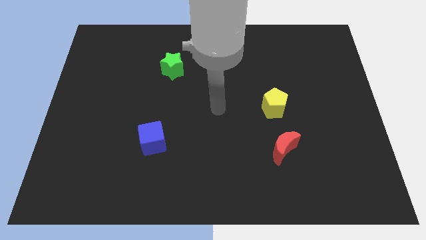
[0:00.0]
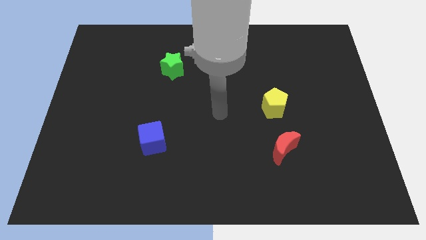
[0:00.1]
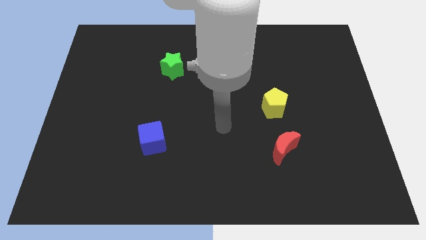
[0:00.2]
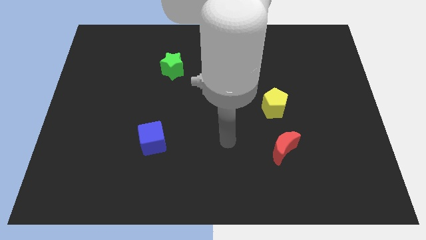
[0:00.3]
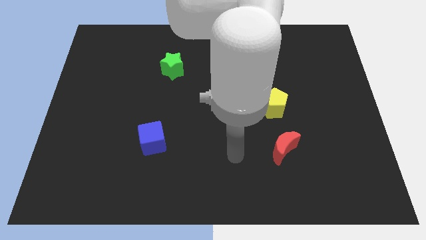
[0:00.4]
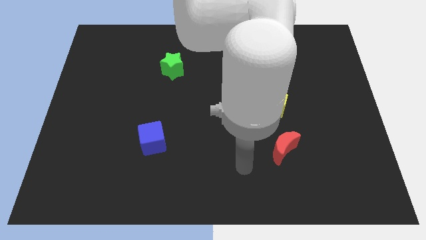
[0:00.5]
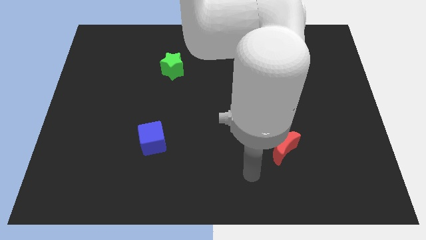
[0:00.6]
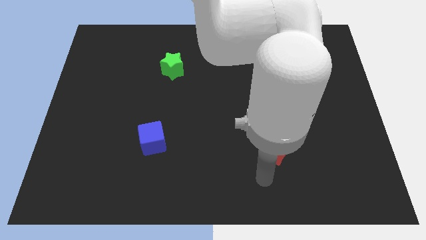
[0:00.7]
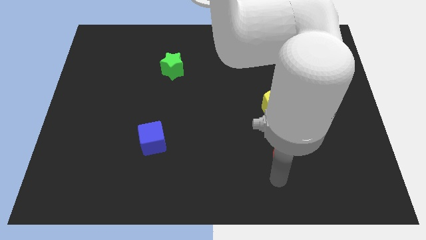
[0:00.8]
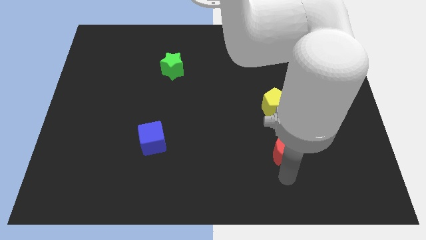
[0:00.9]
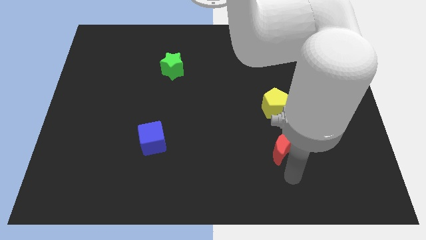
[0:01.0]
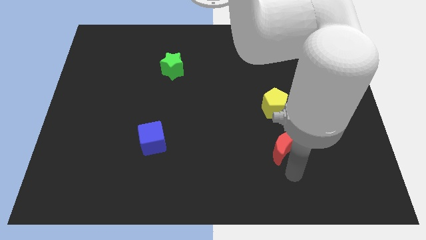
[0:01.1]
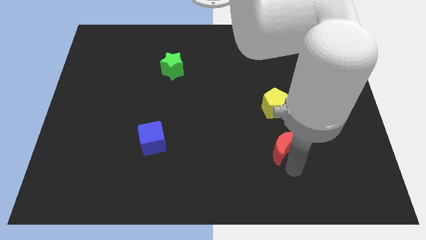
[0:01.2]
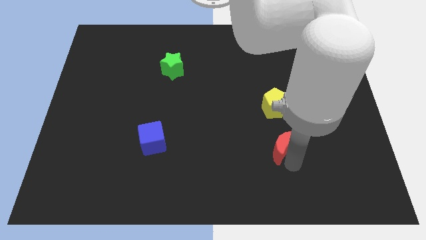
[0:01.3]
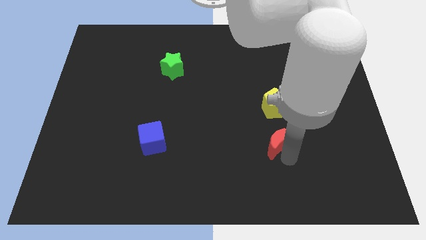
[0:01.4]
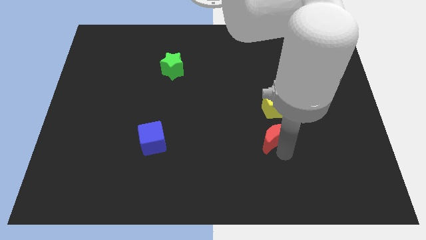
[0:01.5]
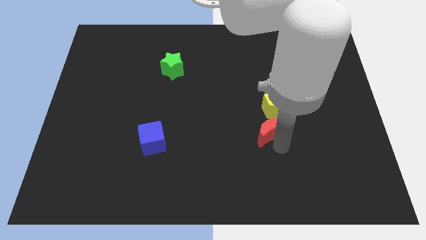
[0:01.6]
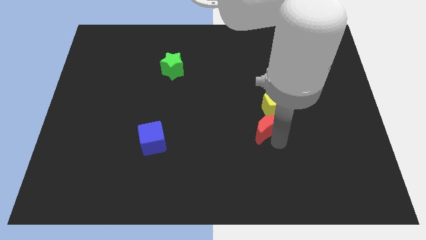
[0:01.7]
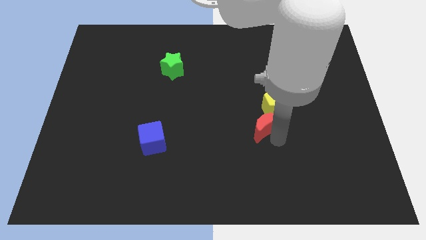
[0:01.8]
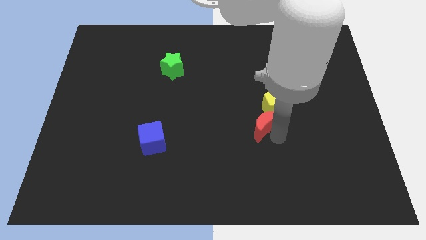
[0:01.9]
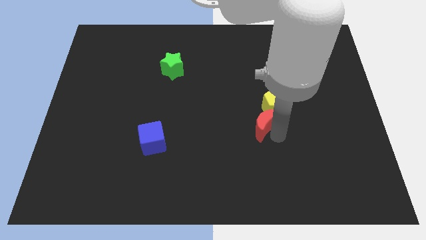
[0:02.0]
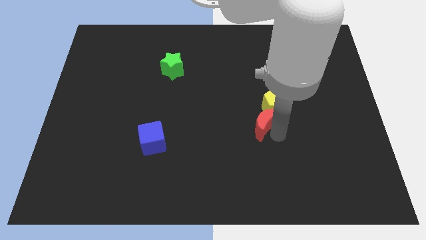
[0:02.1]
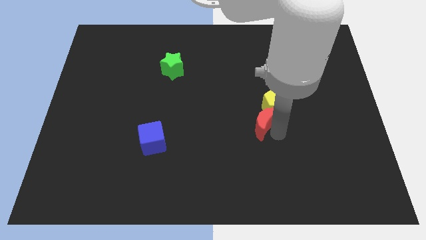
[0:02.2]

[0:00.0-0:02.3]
slide the red moon towards the pentagon

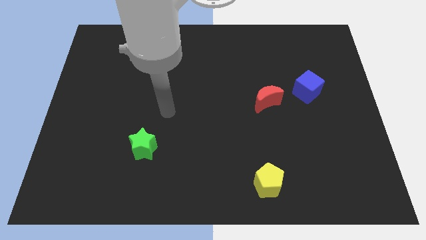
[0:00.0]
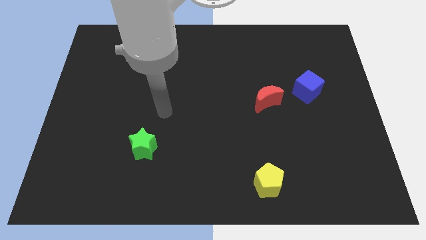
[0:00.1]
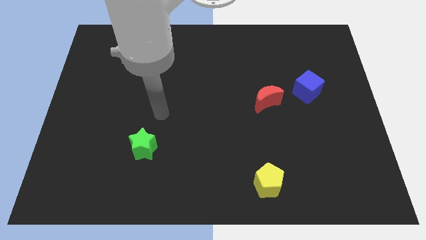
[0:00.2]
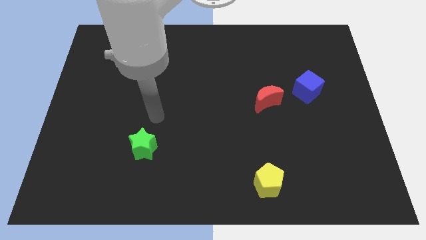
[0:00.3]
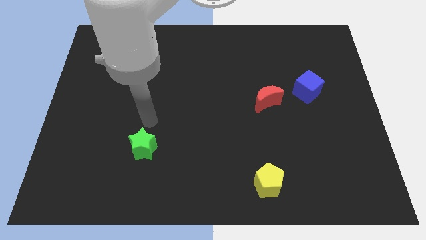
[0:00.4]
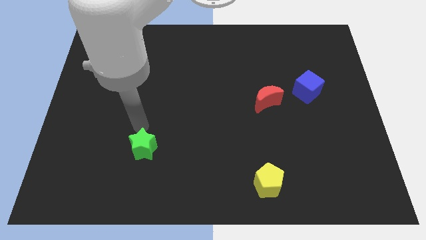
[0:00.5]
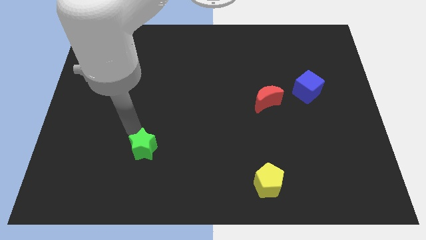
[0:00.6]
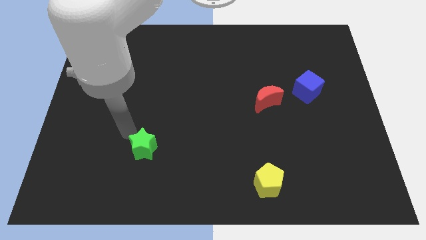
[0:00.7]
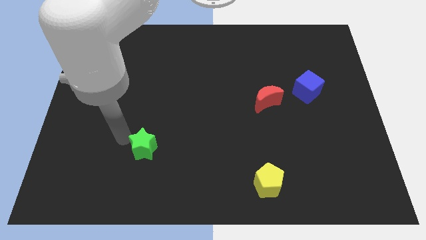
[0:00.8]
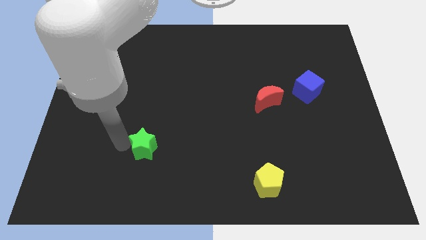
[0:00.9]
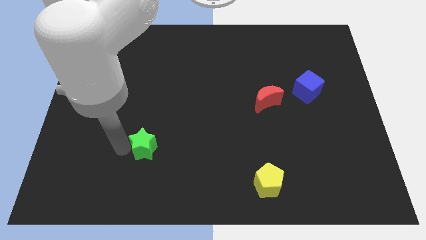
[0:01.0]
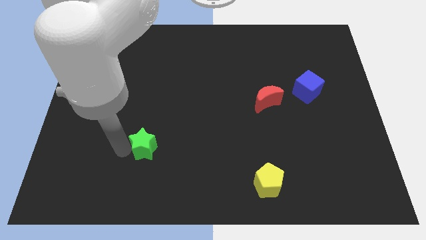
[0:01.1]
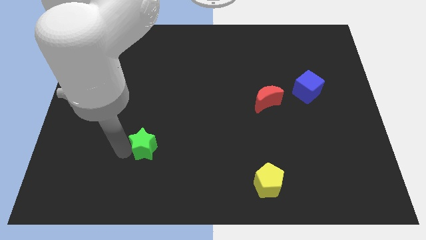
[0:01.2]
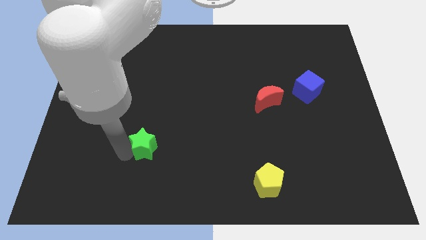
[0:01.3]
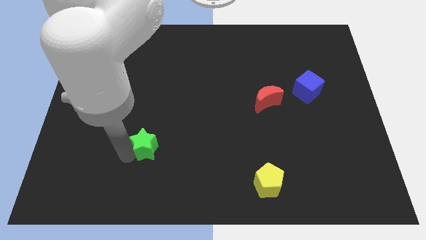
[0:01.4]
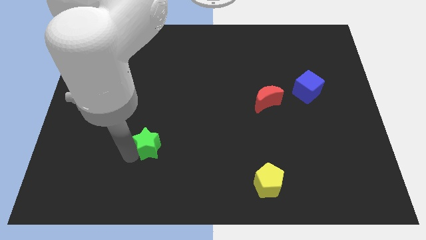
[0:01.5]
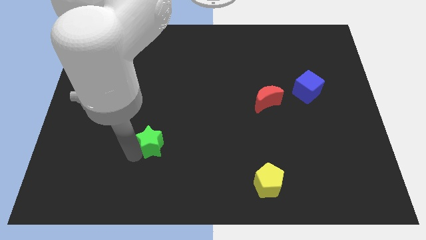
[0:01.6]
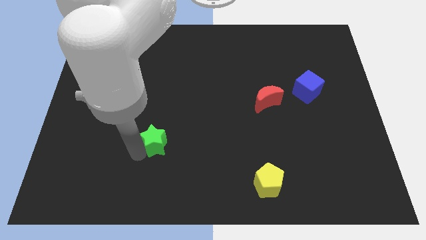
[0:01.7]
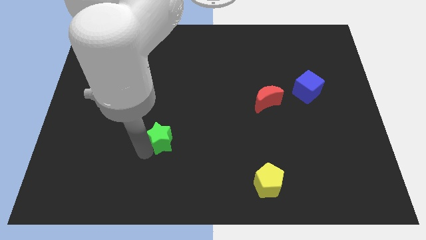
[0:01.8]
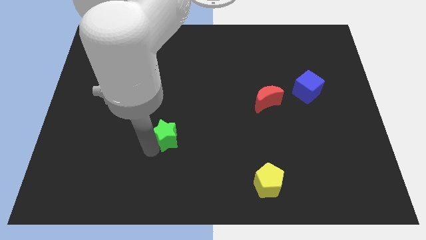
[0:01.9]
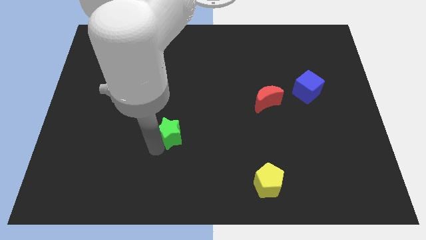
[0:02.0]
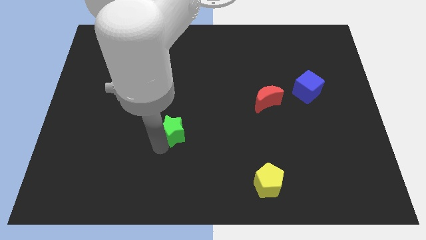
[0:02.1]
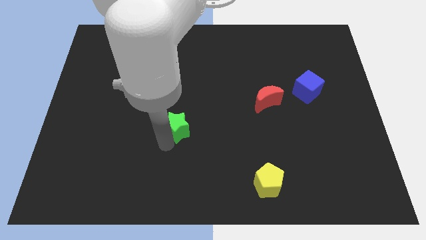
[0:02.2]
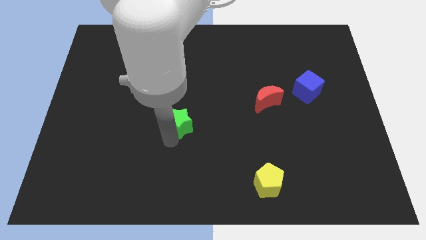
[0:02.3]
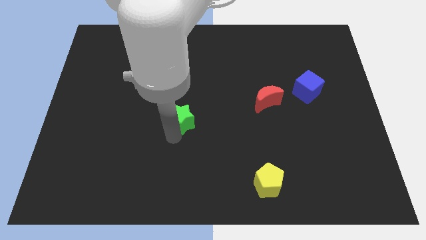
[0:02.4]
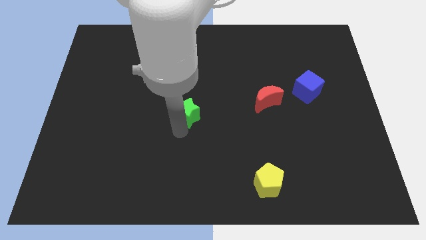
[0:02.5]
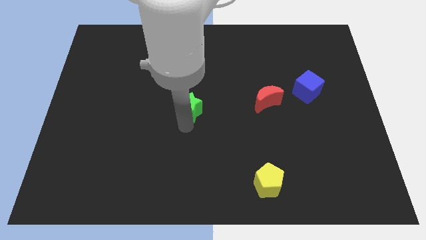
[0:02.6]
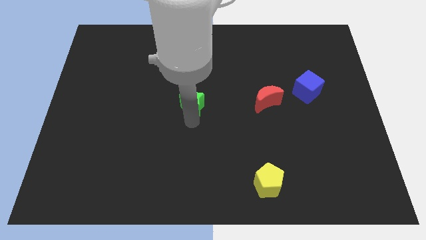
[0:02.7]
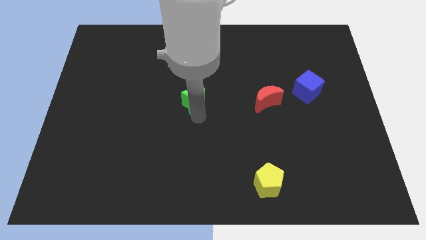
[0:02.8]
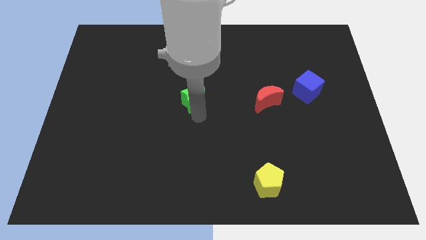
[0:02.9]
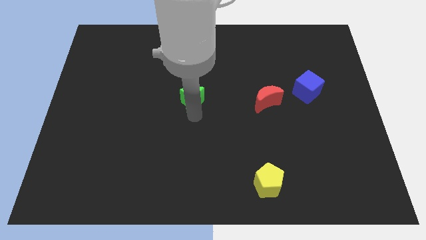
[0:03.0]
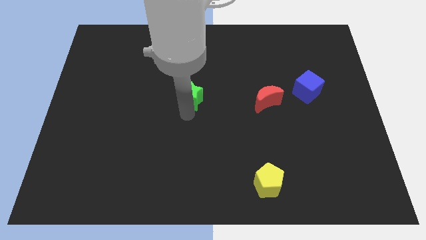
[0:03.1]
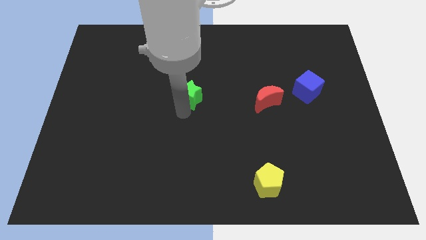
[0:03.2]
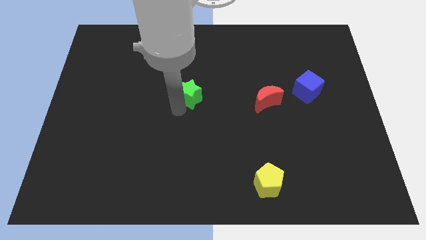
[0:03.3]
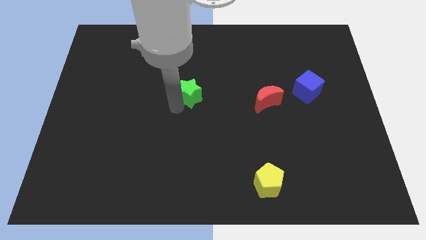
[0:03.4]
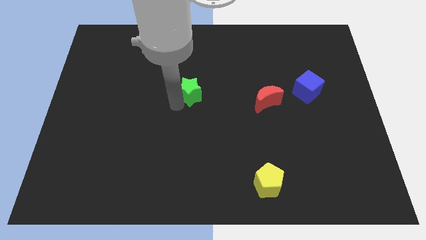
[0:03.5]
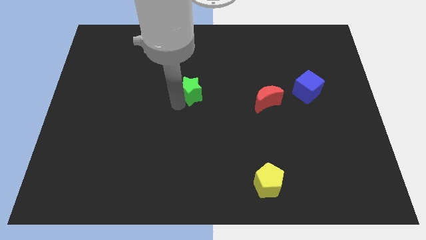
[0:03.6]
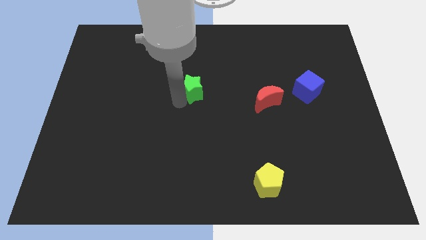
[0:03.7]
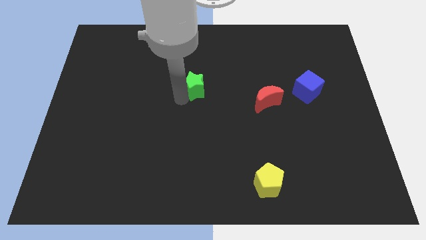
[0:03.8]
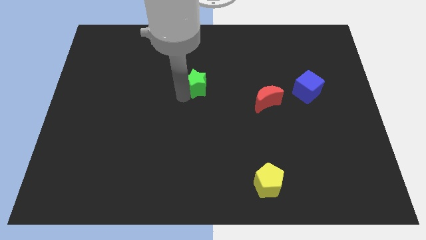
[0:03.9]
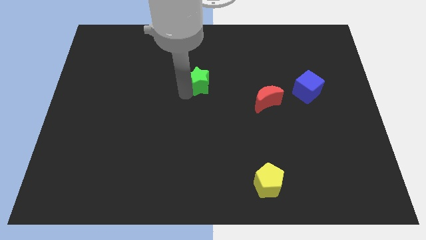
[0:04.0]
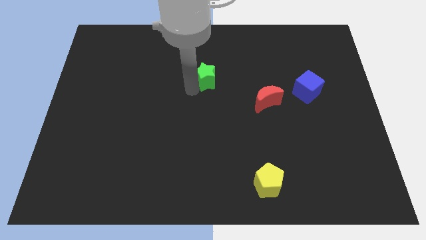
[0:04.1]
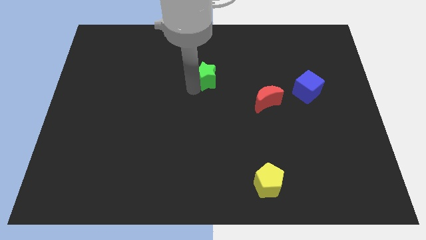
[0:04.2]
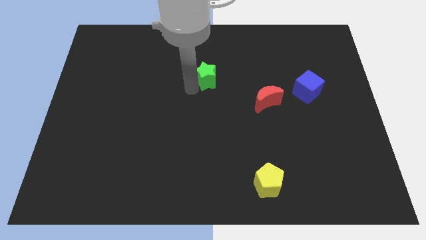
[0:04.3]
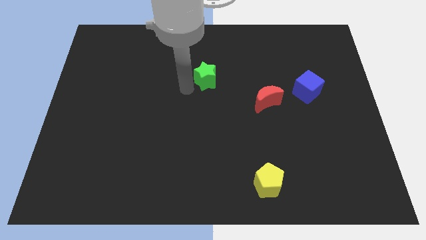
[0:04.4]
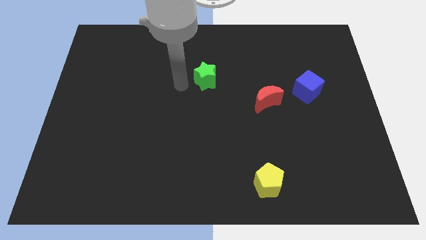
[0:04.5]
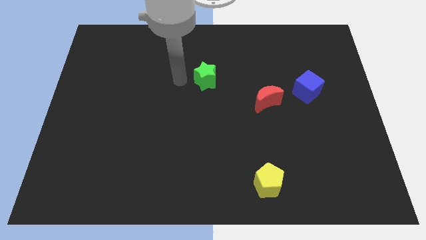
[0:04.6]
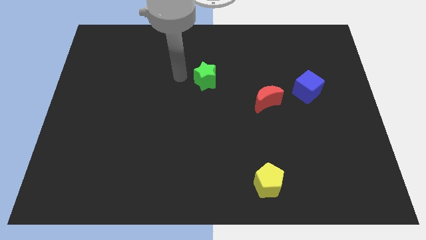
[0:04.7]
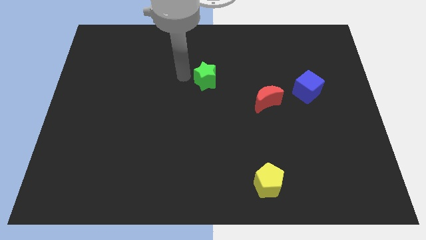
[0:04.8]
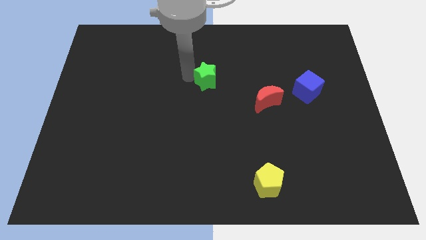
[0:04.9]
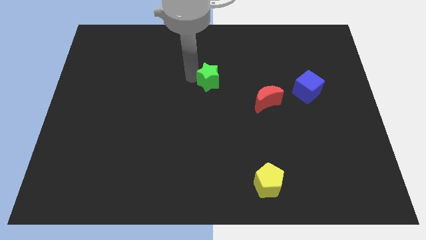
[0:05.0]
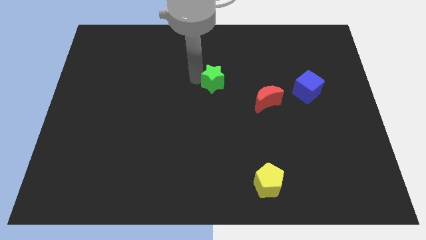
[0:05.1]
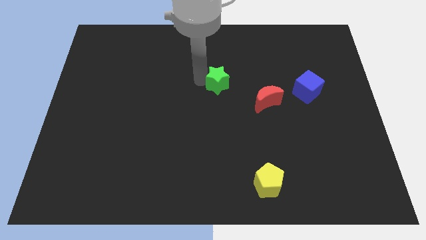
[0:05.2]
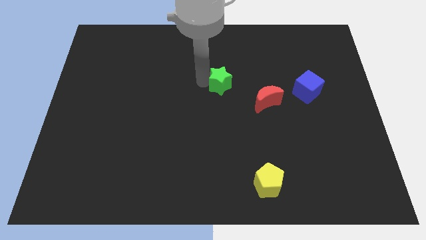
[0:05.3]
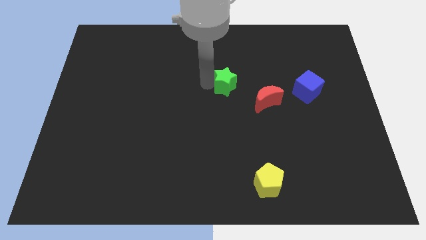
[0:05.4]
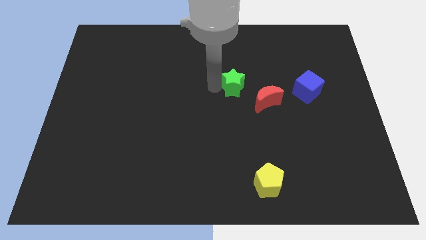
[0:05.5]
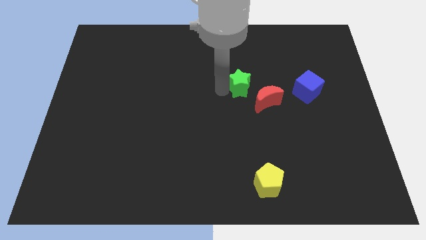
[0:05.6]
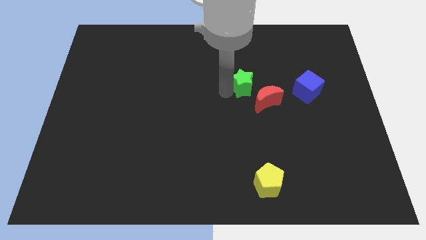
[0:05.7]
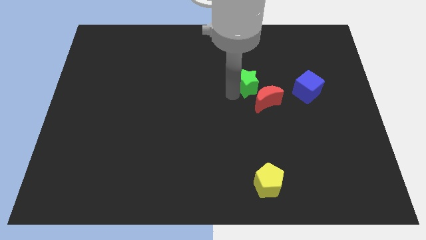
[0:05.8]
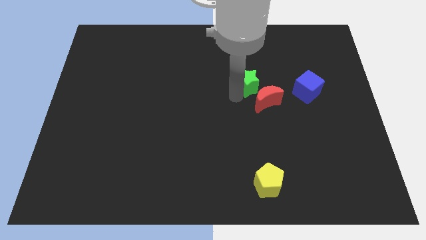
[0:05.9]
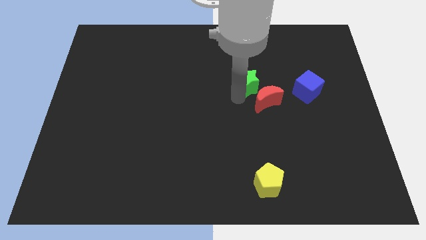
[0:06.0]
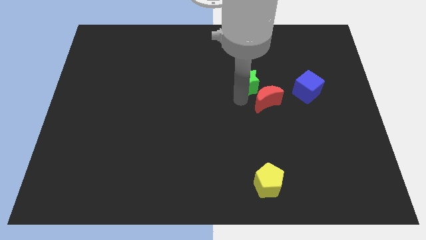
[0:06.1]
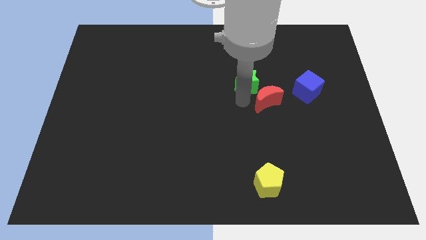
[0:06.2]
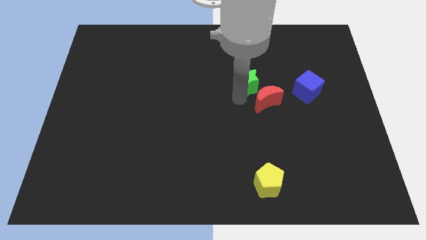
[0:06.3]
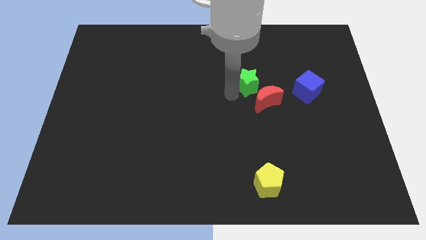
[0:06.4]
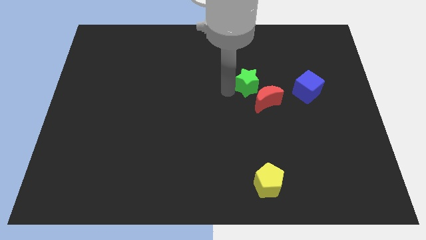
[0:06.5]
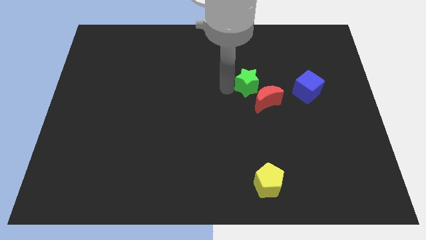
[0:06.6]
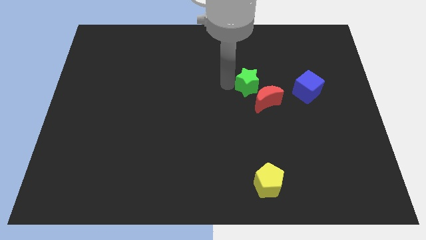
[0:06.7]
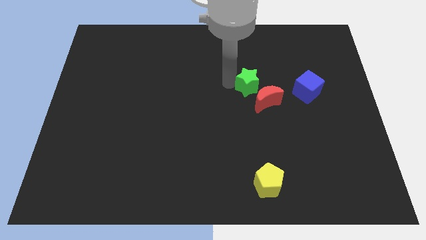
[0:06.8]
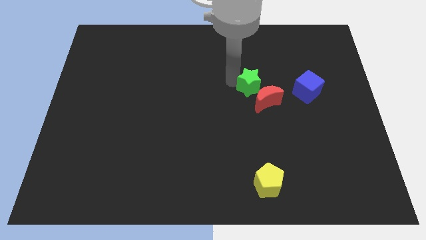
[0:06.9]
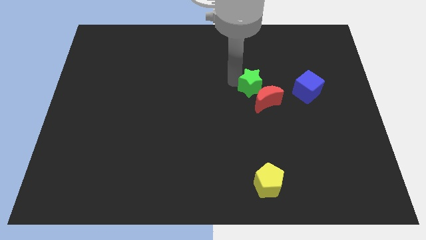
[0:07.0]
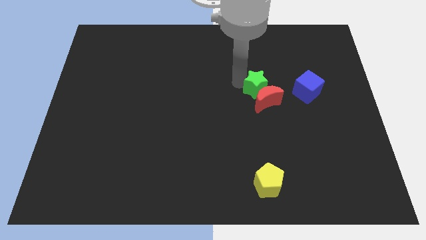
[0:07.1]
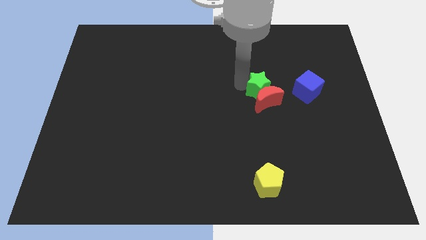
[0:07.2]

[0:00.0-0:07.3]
put the green block to the moon
